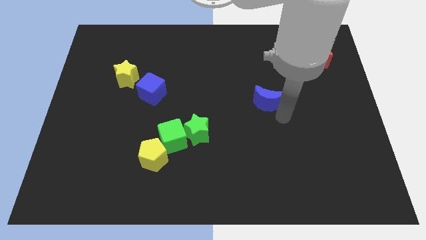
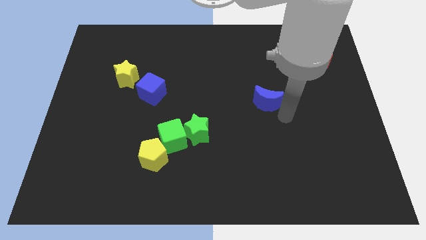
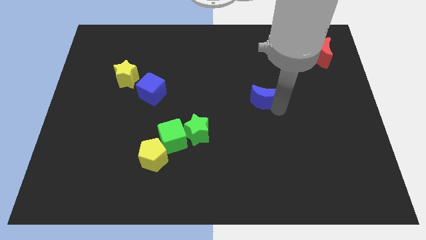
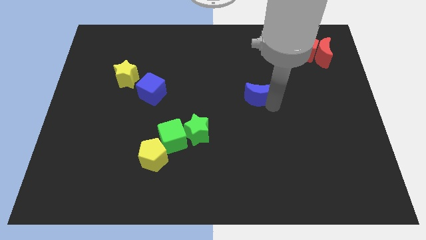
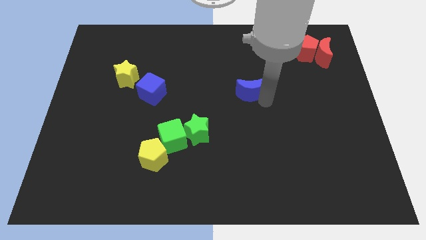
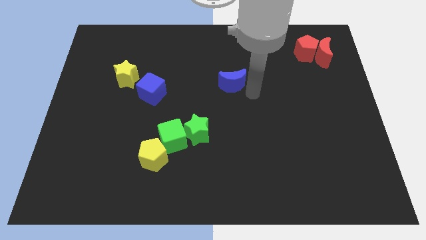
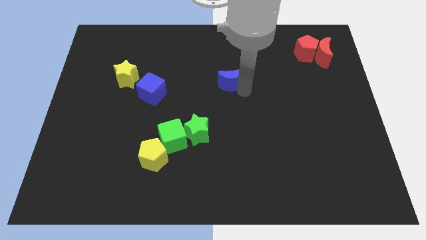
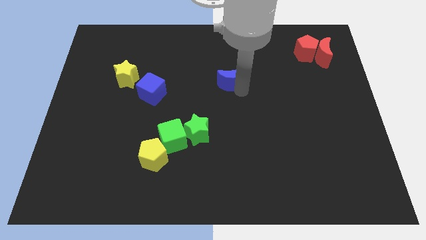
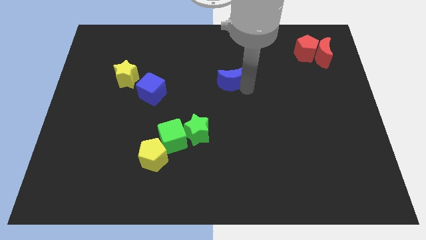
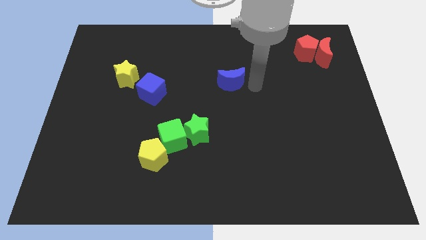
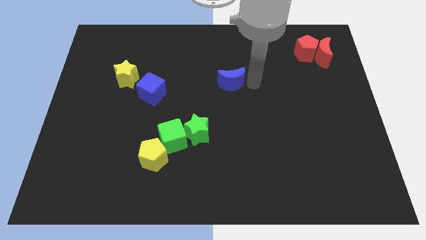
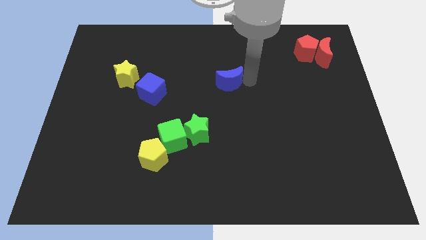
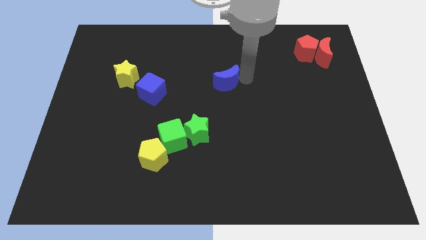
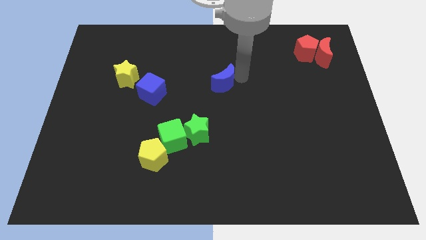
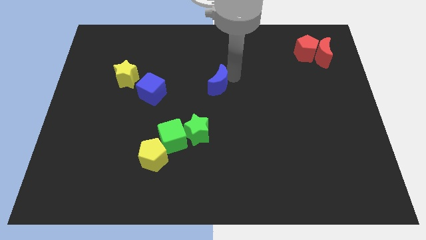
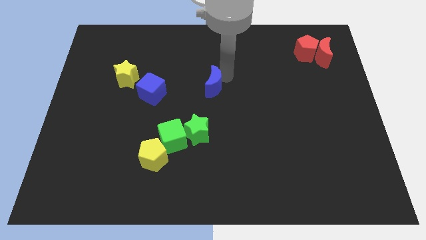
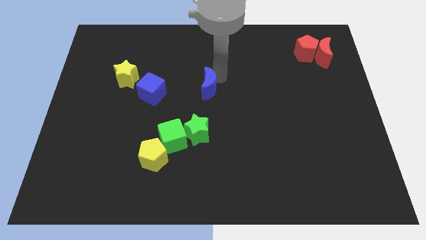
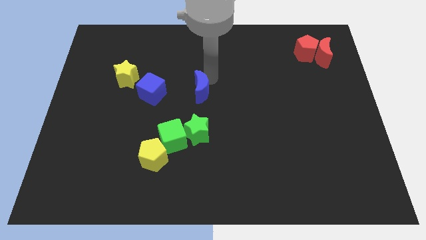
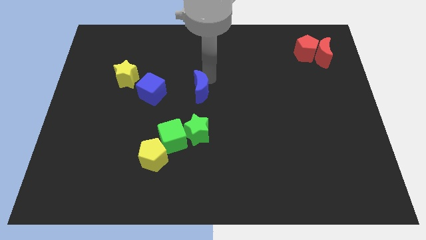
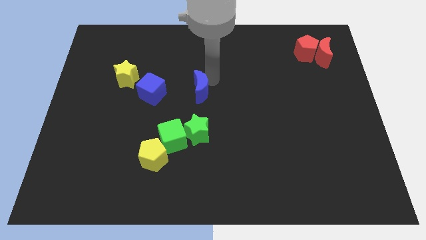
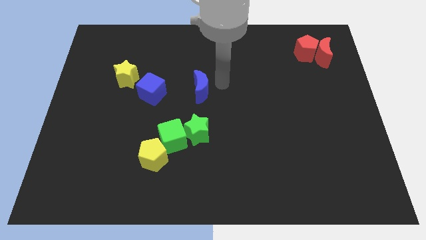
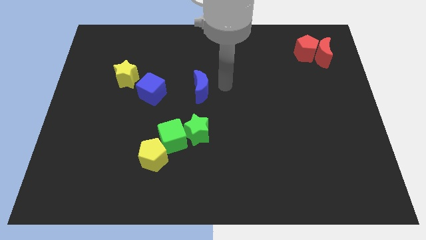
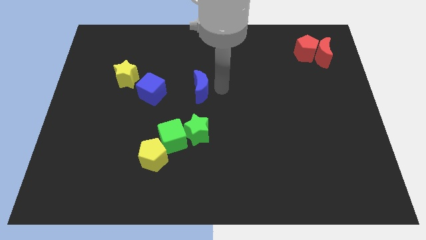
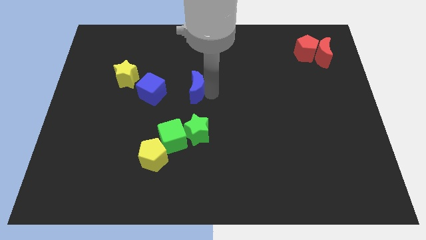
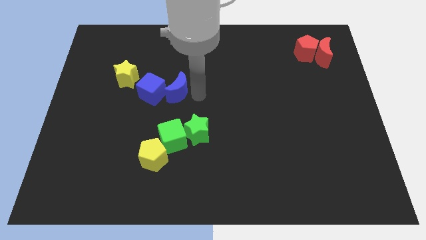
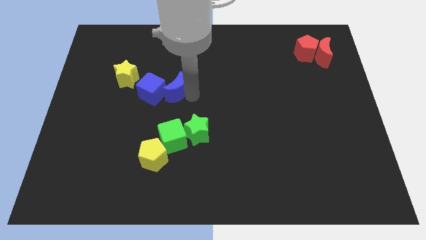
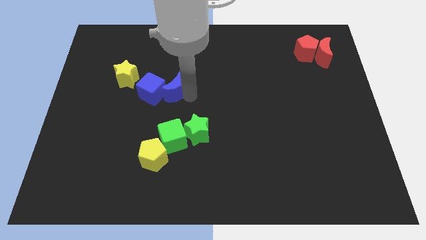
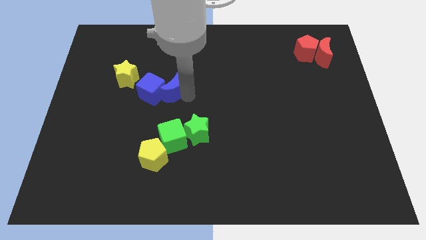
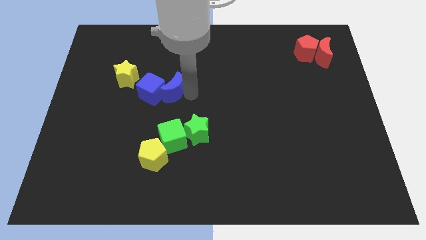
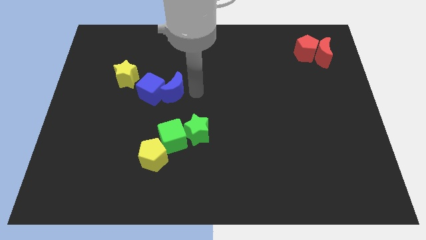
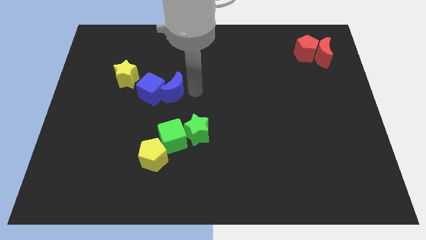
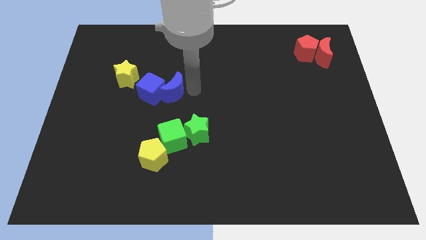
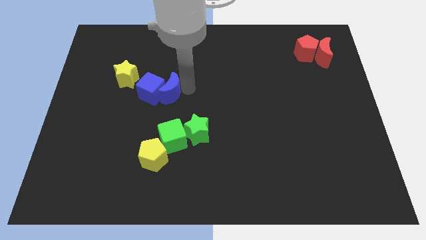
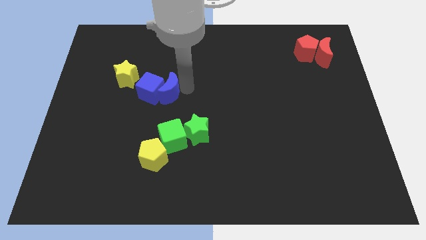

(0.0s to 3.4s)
push the blue moon into the blue cube

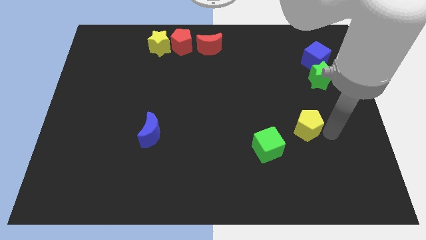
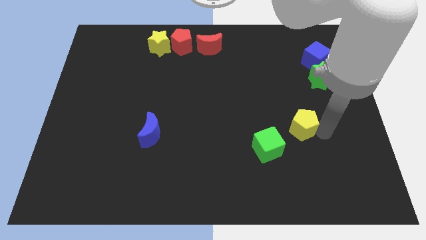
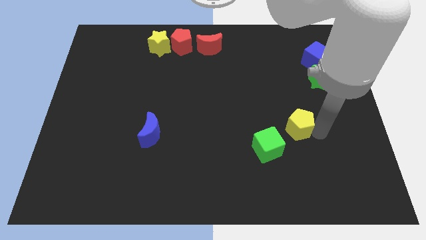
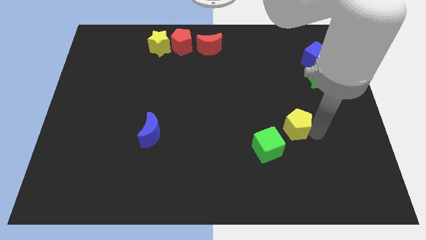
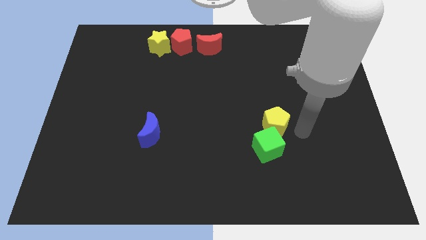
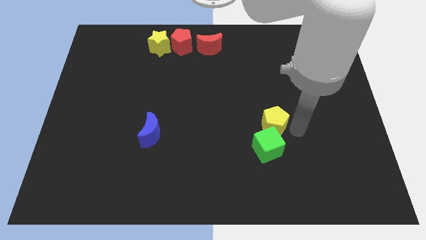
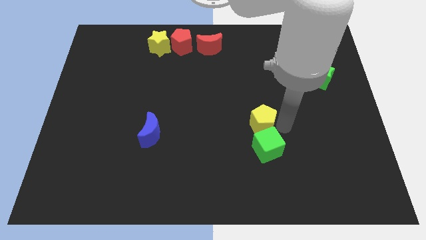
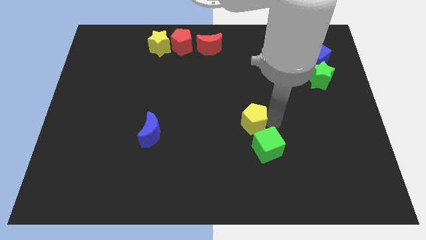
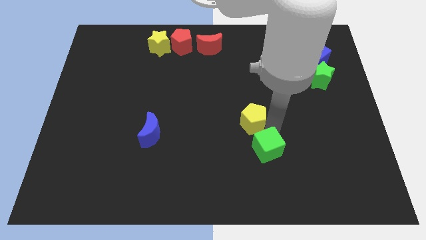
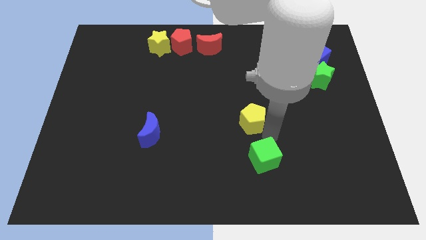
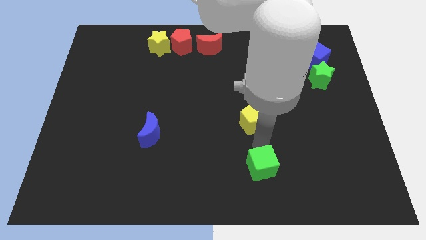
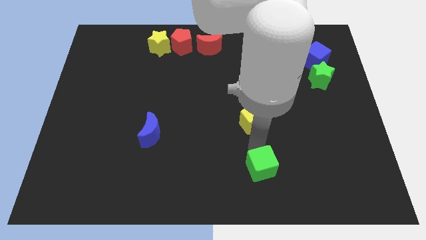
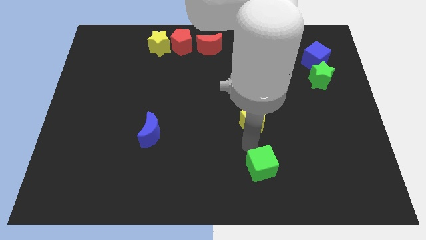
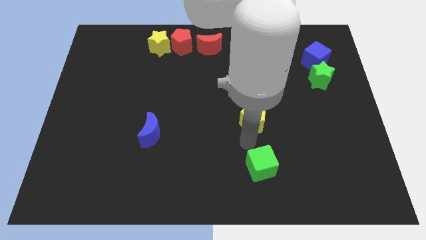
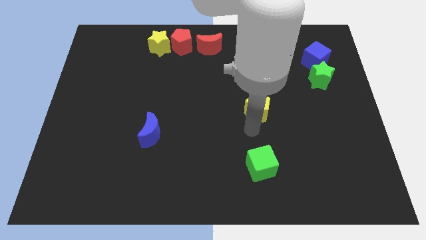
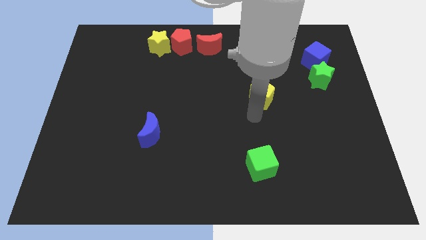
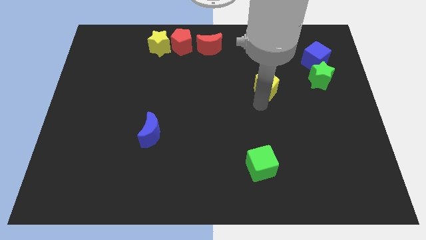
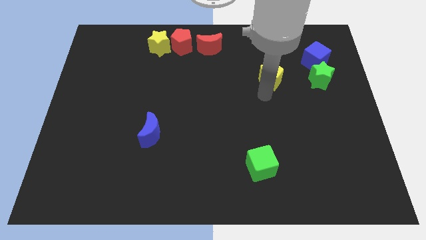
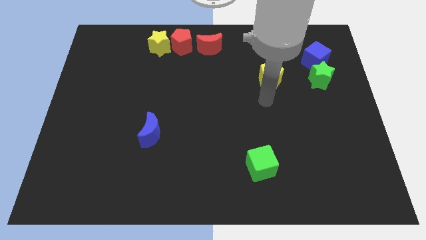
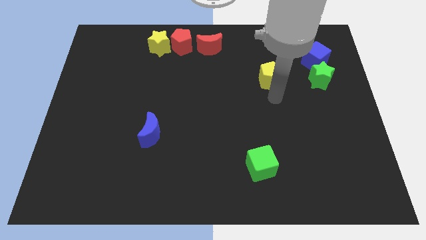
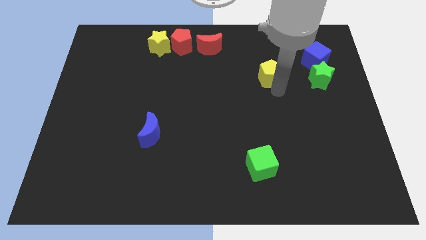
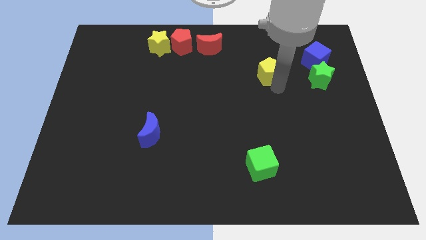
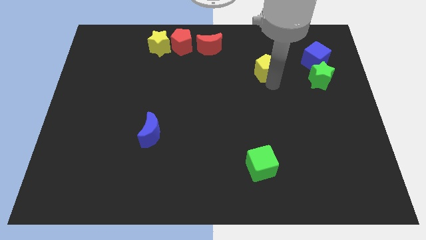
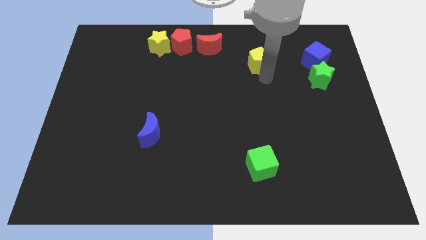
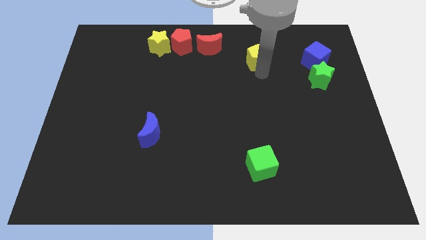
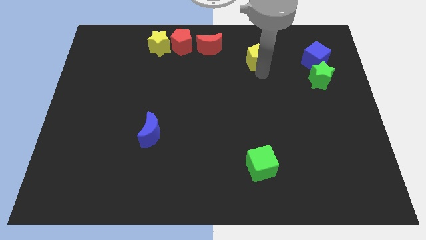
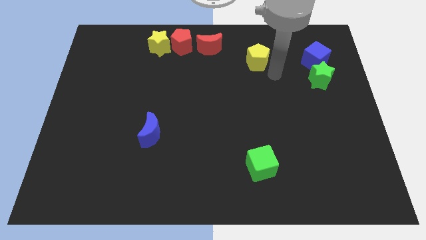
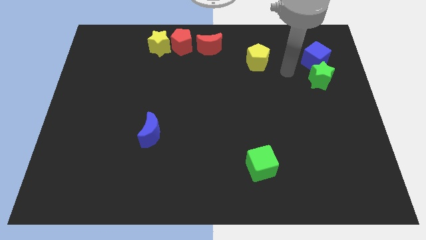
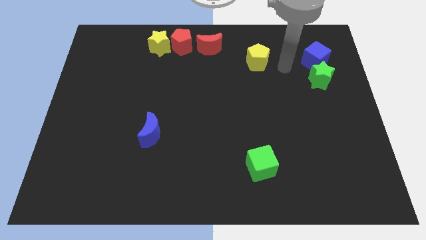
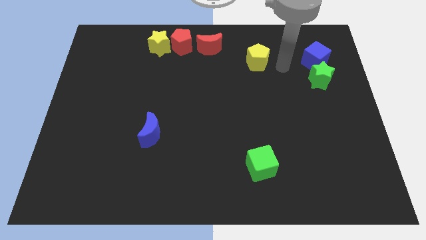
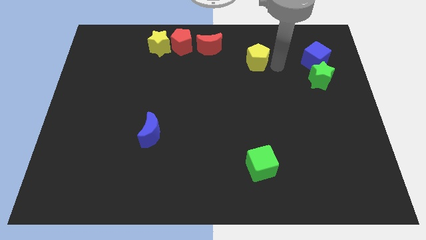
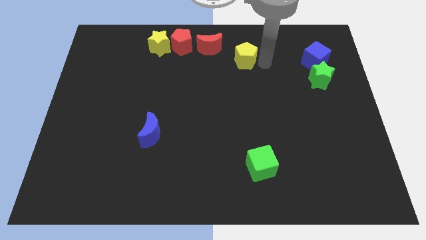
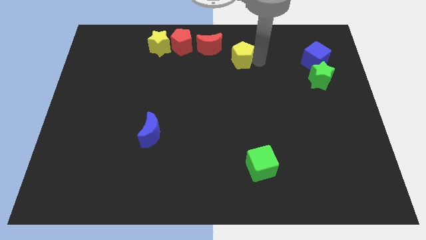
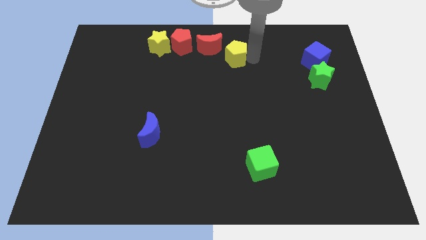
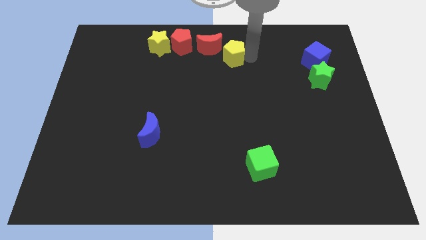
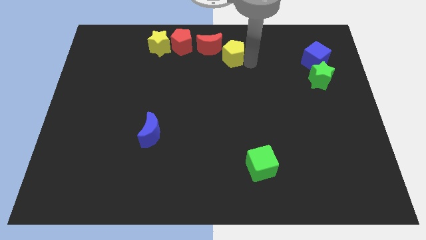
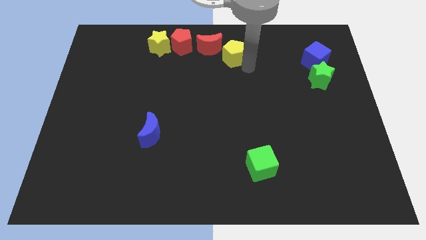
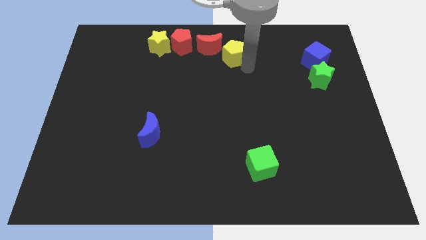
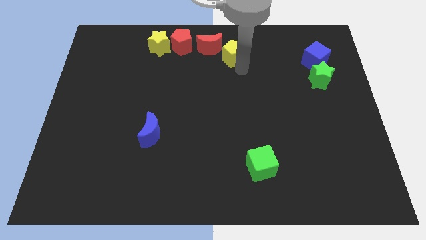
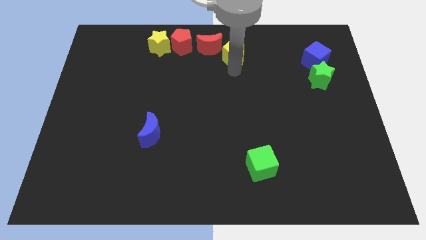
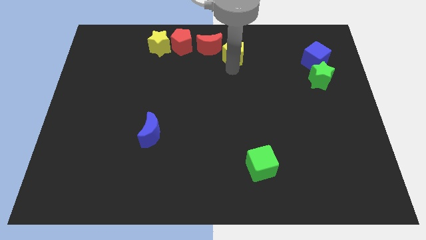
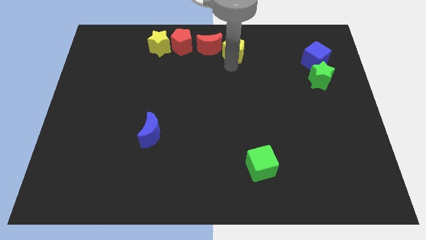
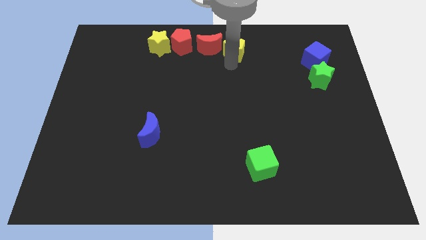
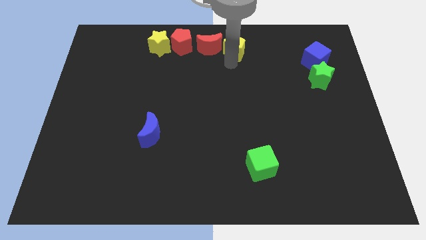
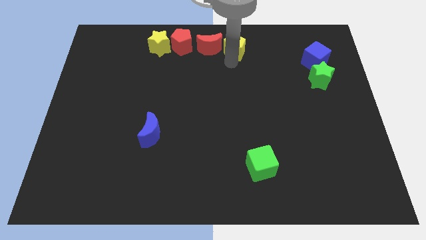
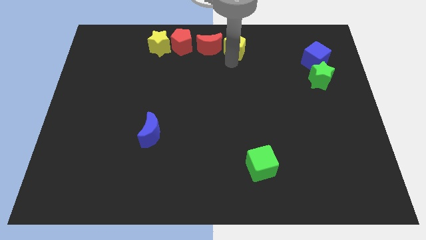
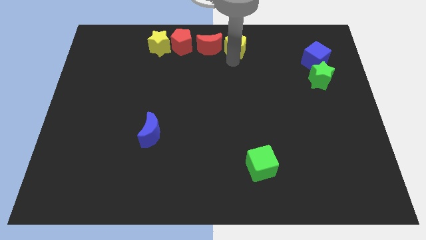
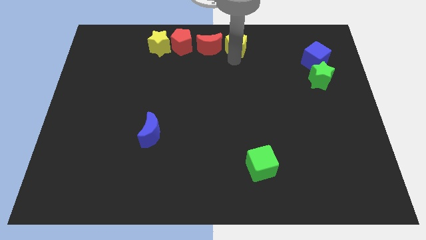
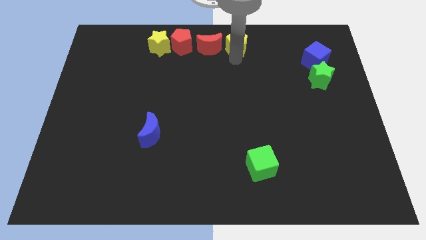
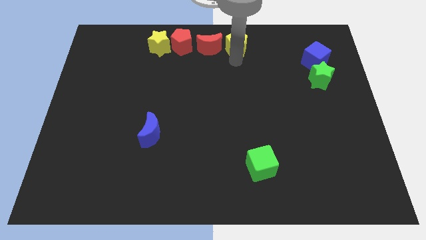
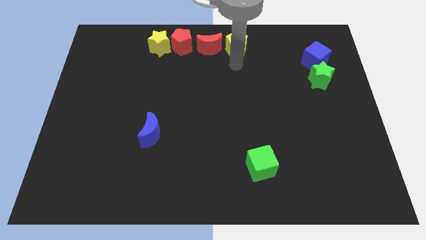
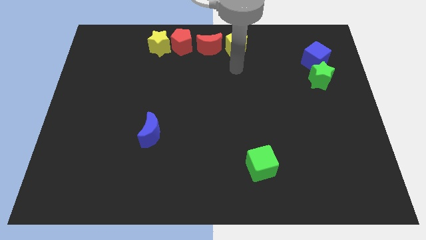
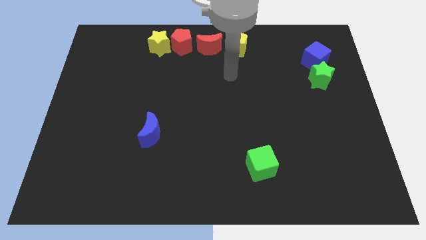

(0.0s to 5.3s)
move the yellow pentagon to the right side of the red crescent

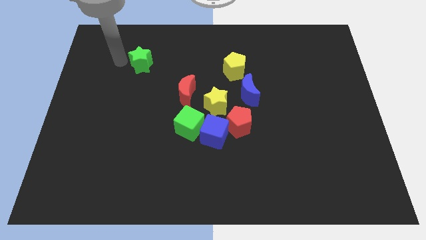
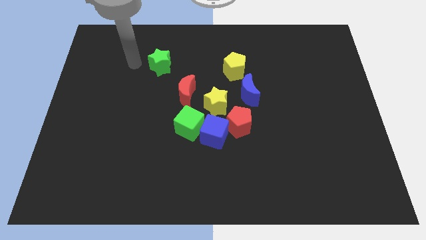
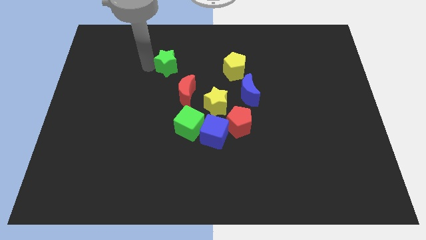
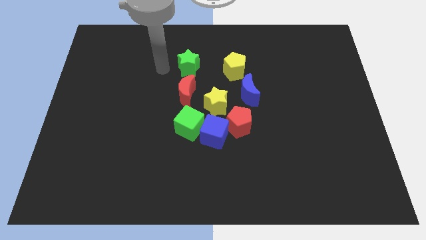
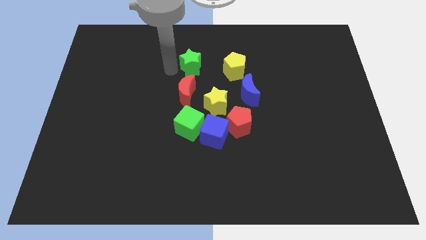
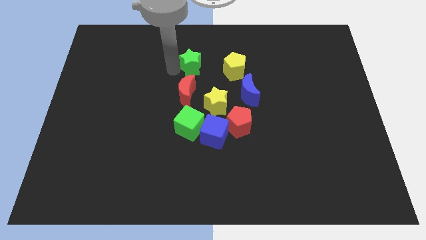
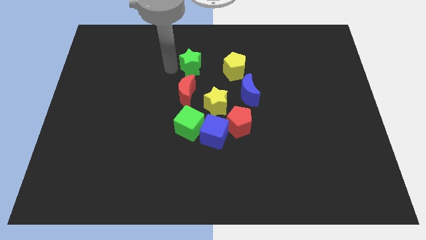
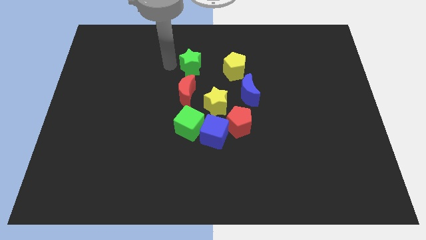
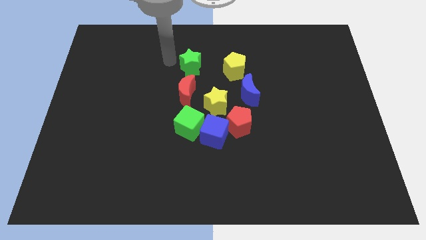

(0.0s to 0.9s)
move the green star parallel to the yellow pentagon
